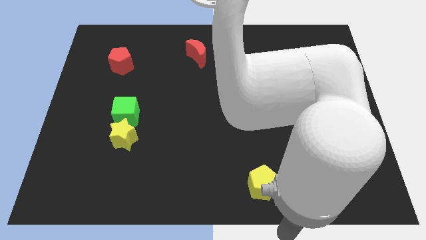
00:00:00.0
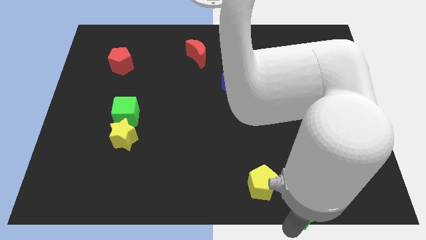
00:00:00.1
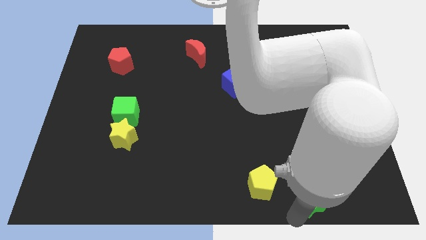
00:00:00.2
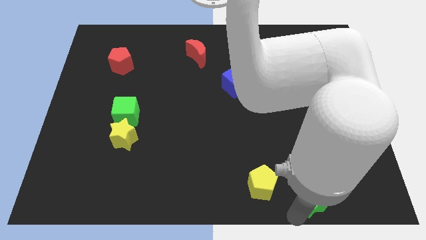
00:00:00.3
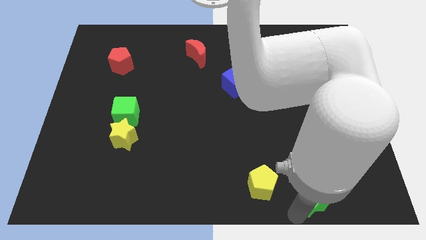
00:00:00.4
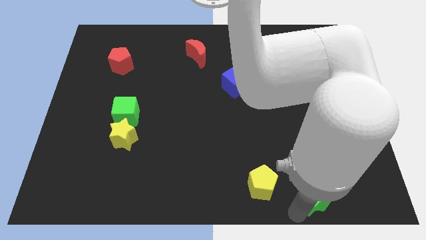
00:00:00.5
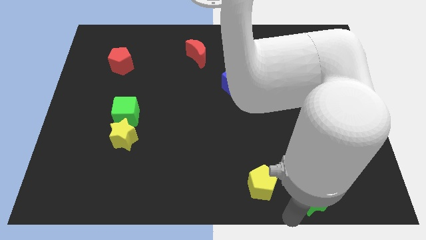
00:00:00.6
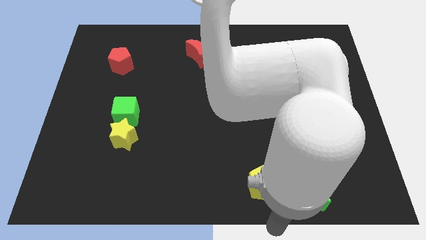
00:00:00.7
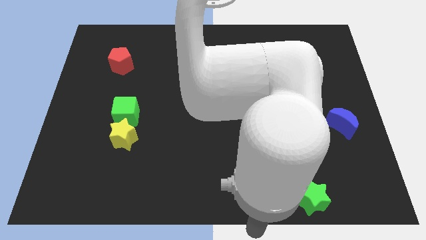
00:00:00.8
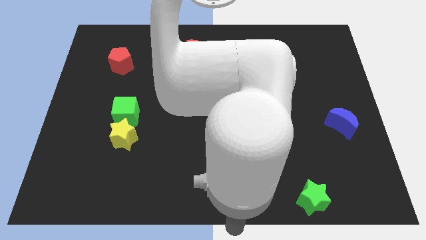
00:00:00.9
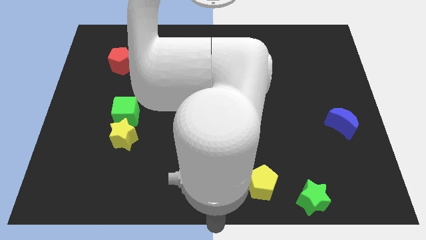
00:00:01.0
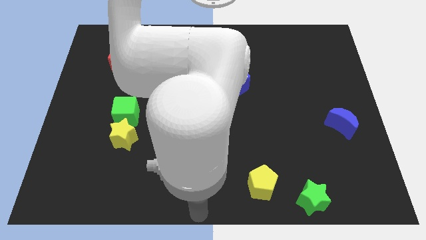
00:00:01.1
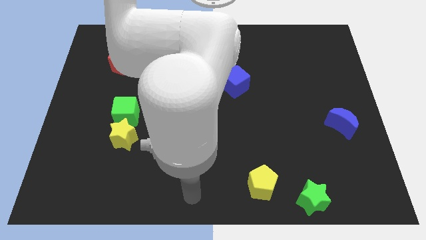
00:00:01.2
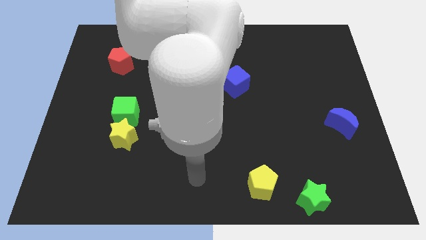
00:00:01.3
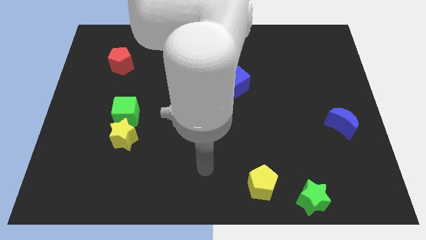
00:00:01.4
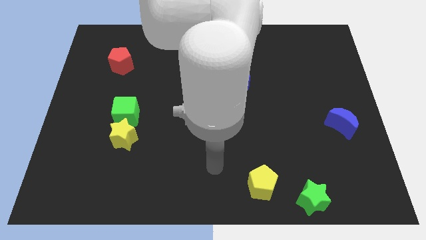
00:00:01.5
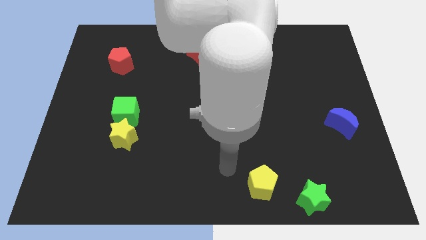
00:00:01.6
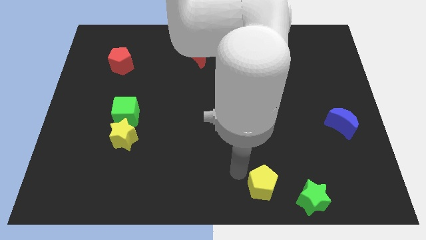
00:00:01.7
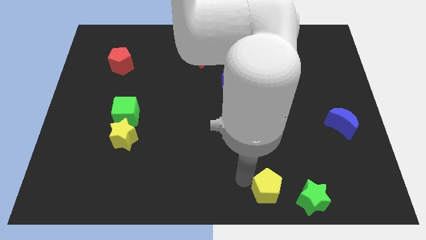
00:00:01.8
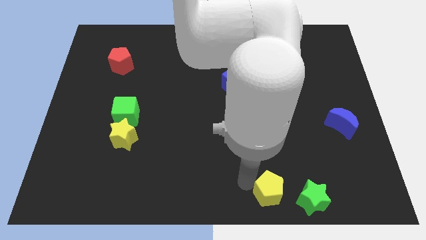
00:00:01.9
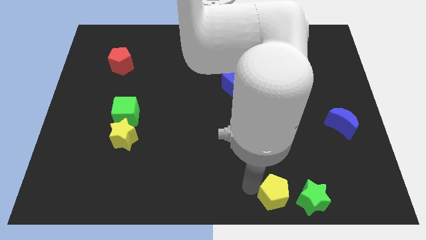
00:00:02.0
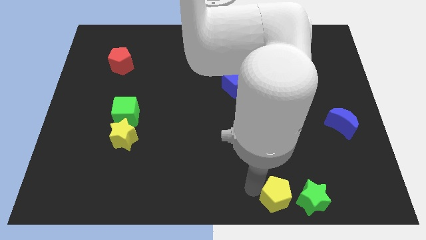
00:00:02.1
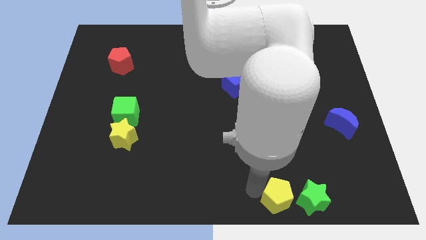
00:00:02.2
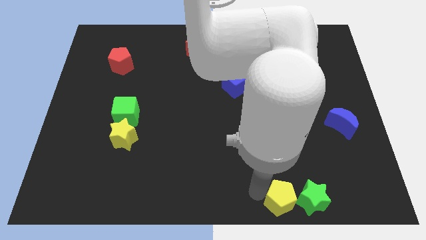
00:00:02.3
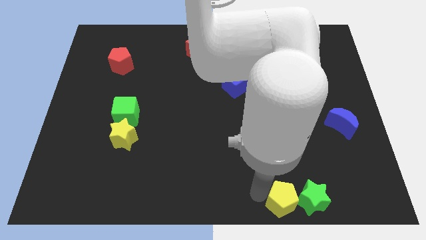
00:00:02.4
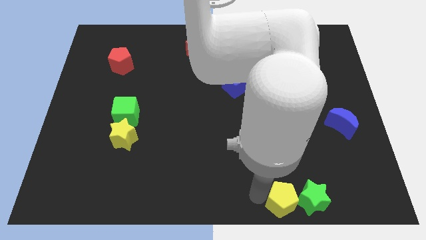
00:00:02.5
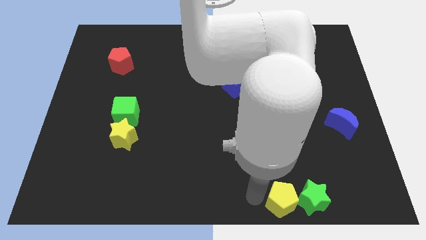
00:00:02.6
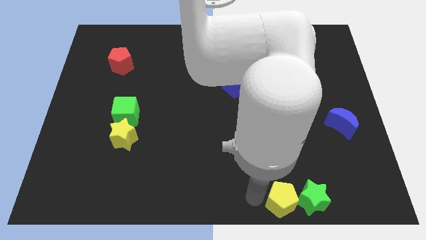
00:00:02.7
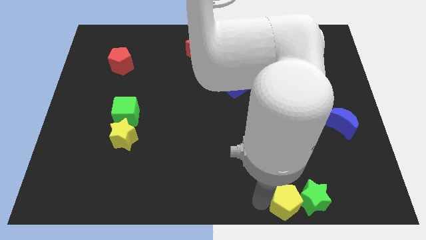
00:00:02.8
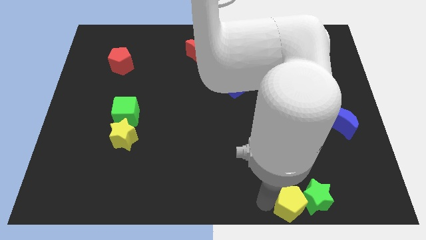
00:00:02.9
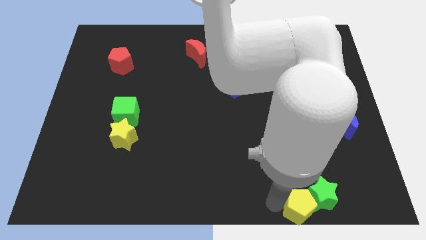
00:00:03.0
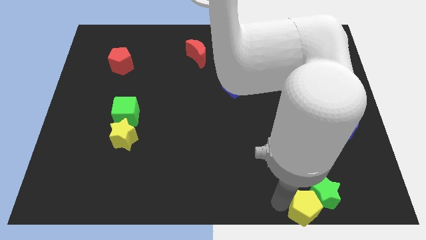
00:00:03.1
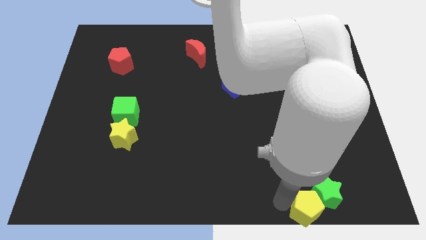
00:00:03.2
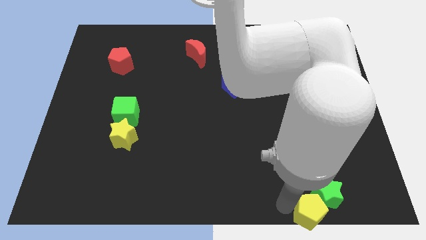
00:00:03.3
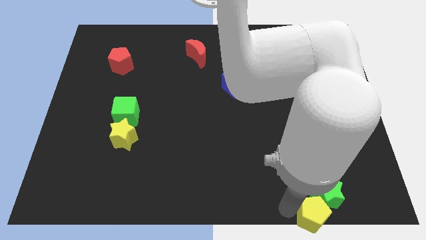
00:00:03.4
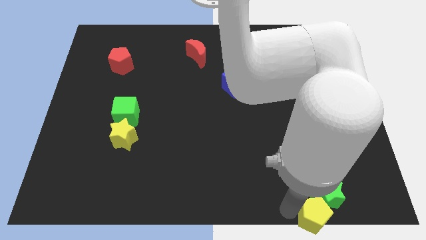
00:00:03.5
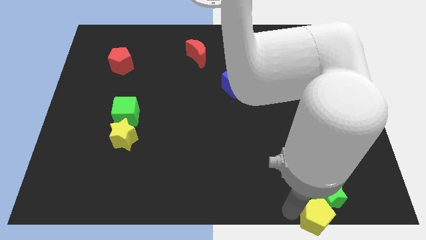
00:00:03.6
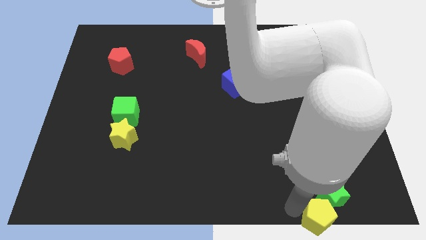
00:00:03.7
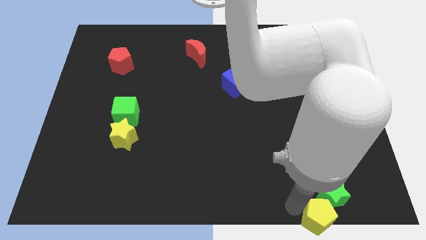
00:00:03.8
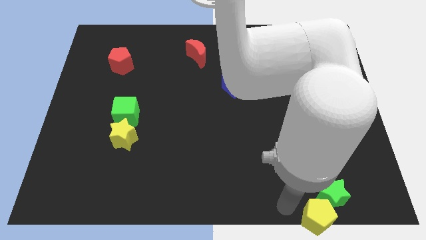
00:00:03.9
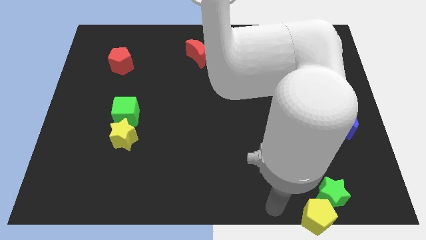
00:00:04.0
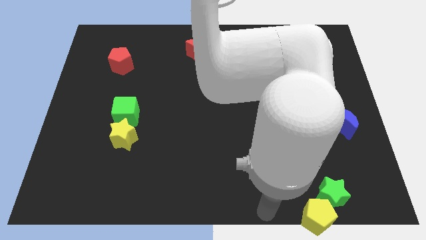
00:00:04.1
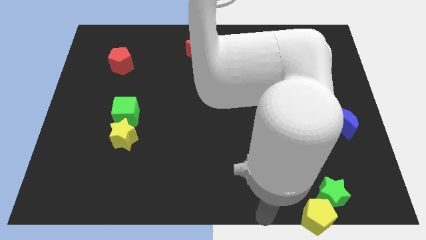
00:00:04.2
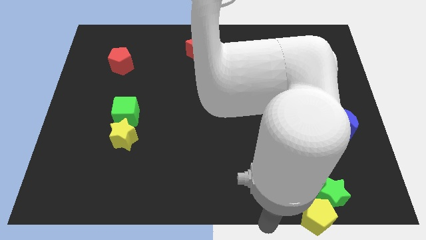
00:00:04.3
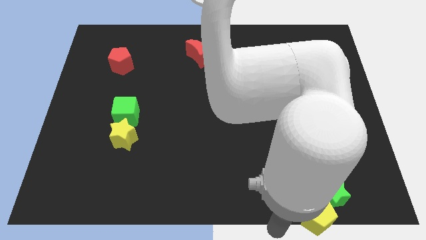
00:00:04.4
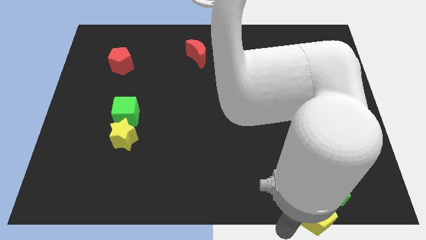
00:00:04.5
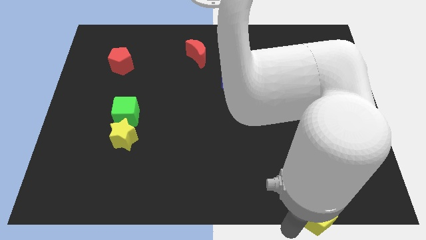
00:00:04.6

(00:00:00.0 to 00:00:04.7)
move yellow pentagon into the green star

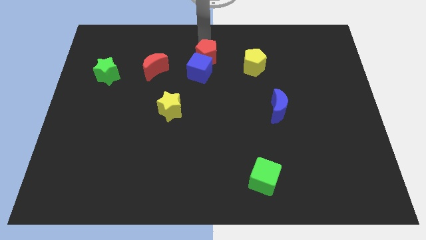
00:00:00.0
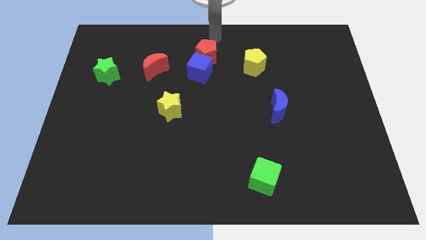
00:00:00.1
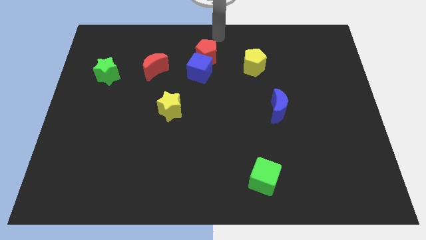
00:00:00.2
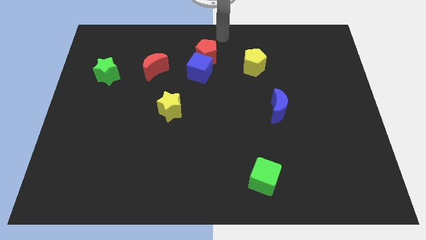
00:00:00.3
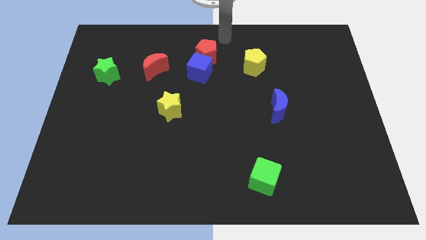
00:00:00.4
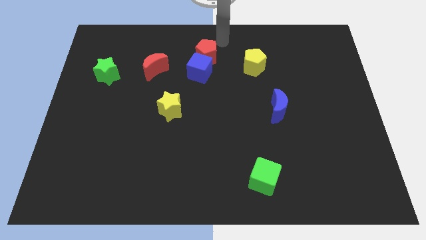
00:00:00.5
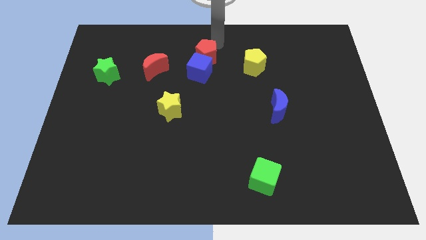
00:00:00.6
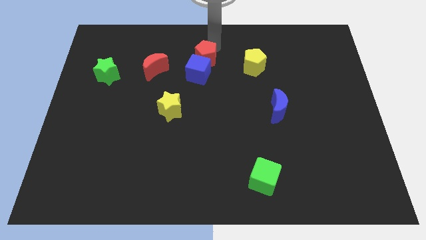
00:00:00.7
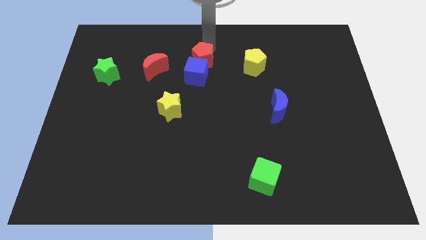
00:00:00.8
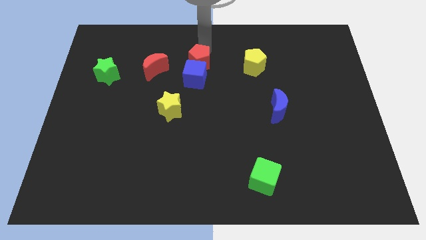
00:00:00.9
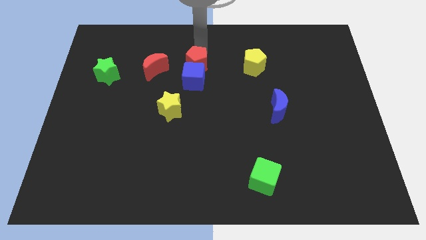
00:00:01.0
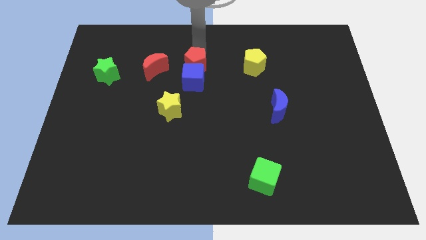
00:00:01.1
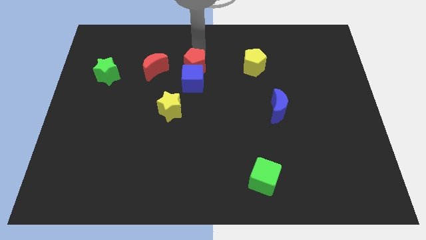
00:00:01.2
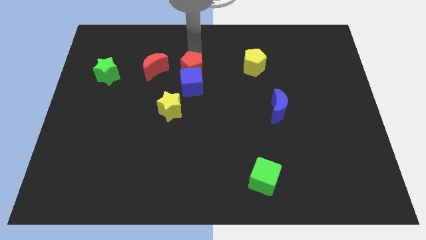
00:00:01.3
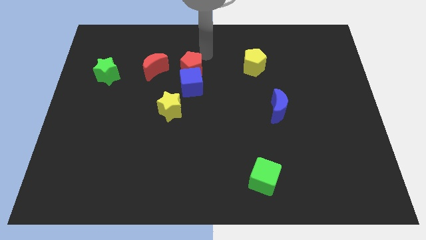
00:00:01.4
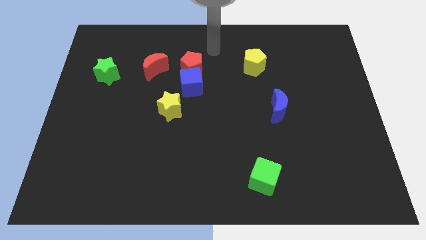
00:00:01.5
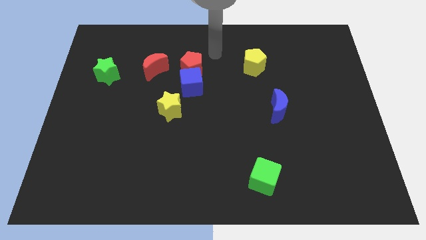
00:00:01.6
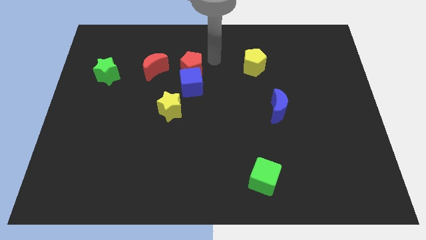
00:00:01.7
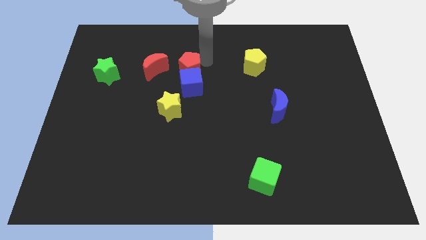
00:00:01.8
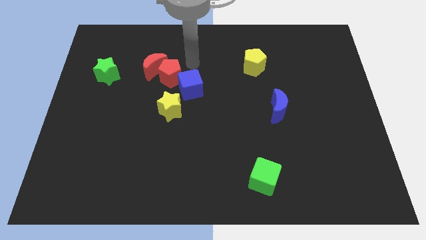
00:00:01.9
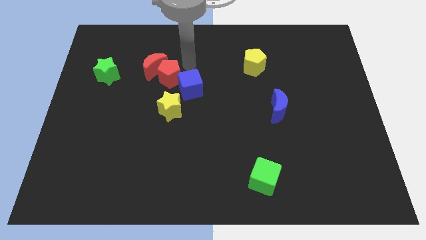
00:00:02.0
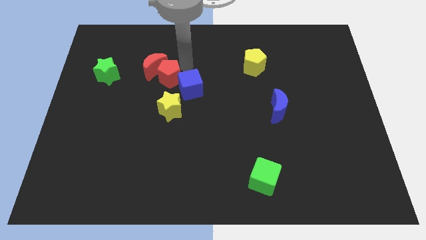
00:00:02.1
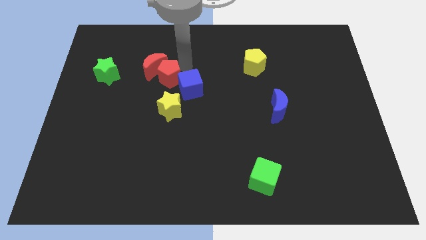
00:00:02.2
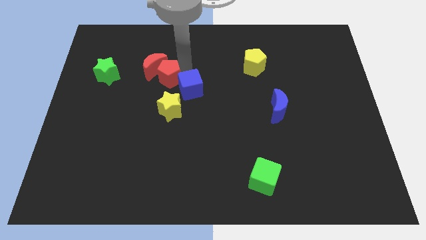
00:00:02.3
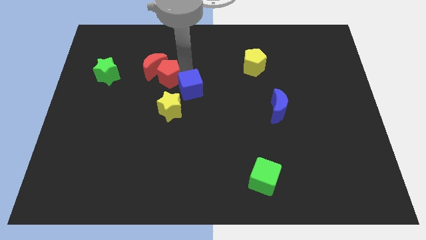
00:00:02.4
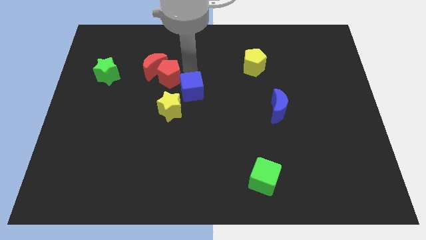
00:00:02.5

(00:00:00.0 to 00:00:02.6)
push the red pentagon into the red moon

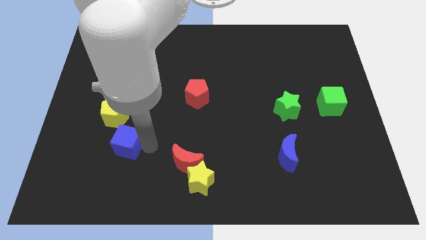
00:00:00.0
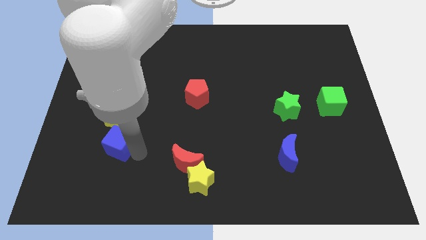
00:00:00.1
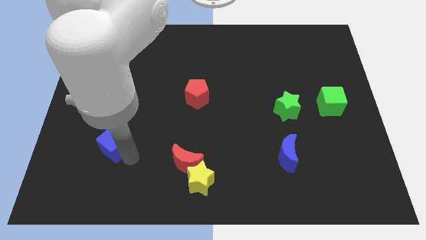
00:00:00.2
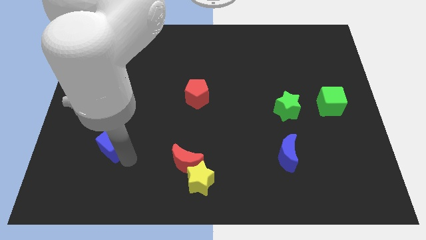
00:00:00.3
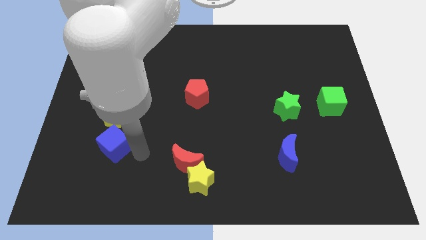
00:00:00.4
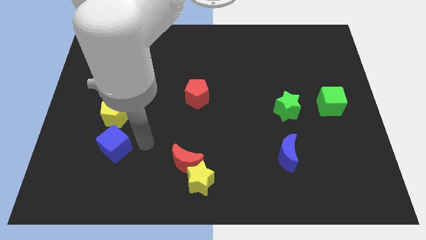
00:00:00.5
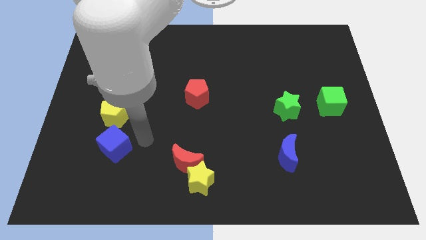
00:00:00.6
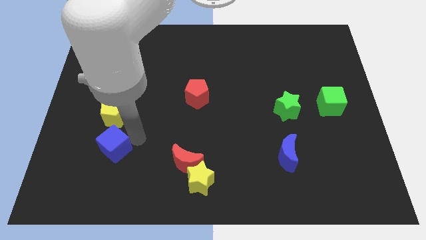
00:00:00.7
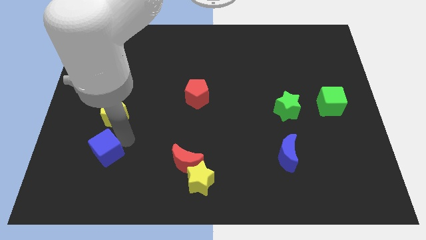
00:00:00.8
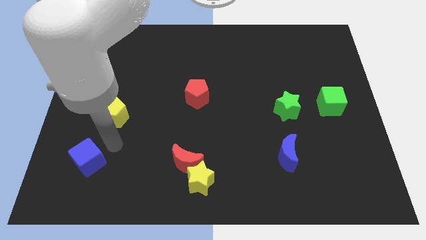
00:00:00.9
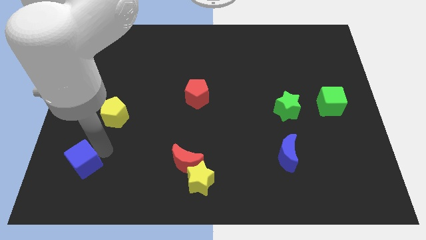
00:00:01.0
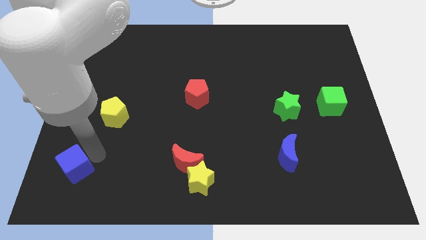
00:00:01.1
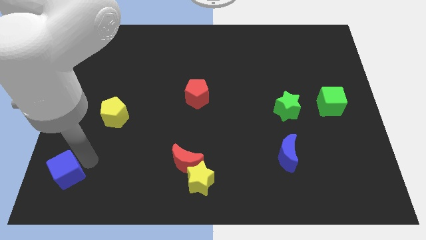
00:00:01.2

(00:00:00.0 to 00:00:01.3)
push the blue cube towards the bottom left side of the board

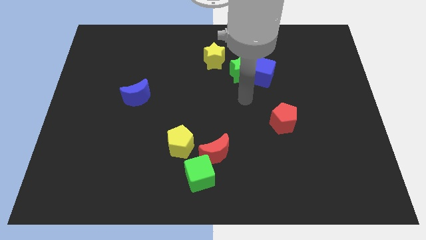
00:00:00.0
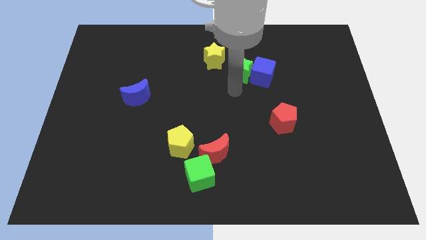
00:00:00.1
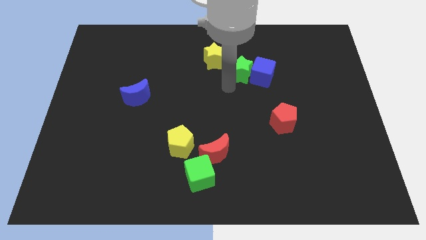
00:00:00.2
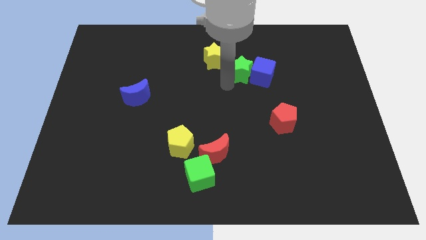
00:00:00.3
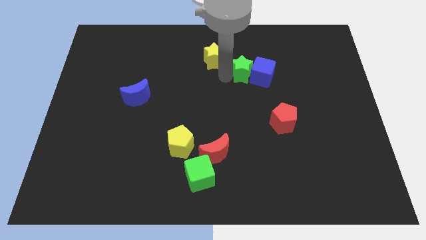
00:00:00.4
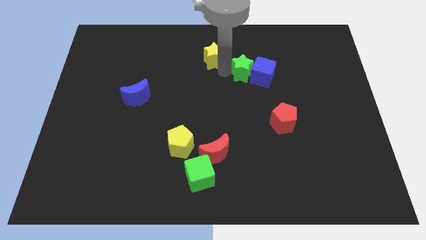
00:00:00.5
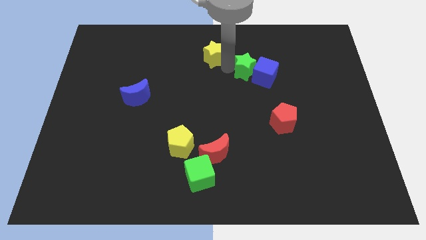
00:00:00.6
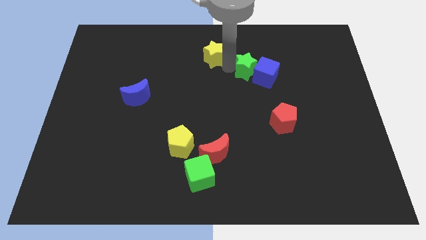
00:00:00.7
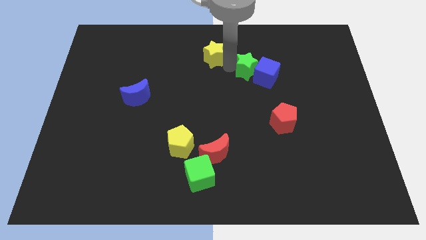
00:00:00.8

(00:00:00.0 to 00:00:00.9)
place arm in between yellow star and green star
